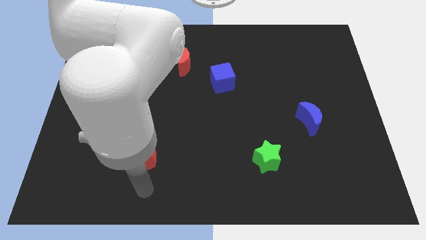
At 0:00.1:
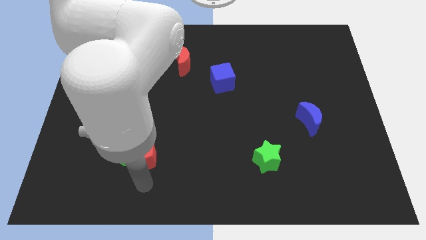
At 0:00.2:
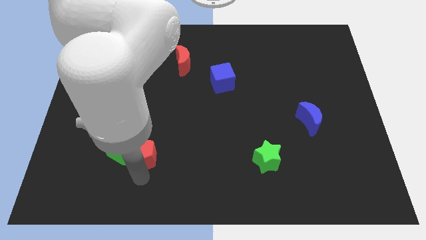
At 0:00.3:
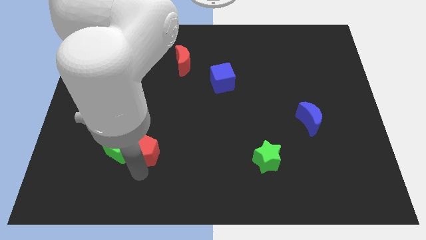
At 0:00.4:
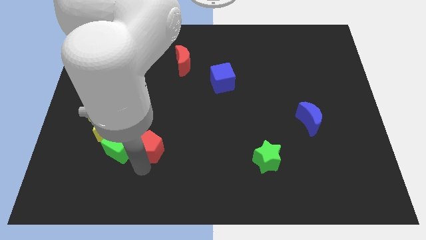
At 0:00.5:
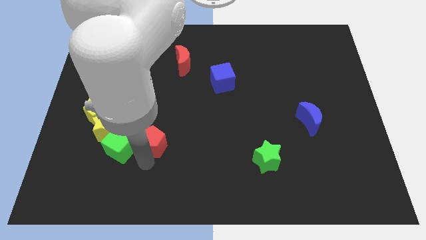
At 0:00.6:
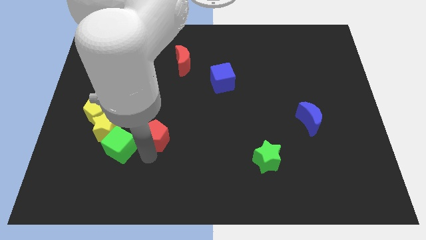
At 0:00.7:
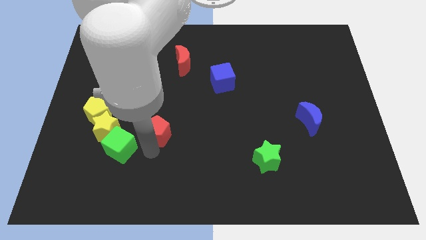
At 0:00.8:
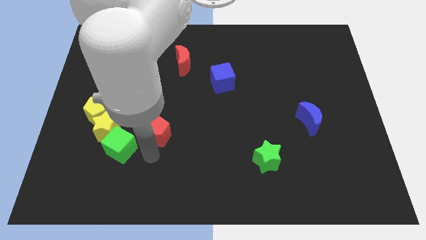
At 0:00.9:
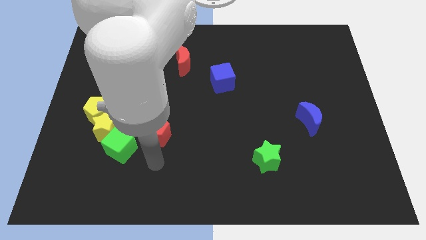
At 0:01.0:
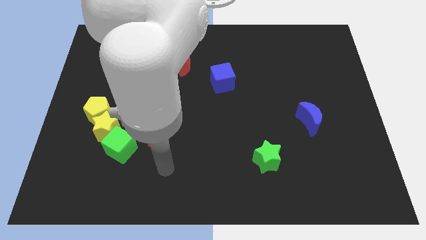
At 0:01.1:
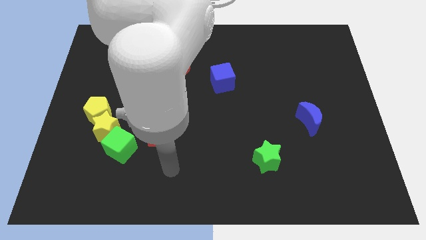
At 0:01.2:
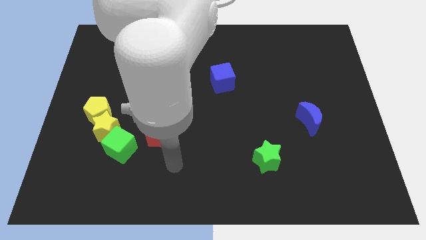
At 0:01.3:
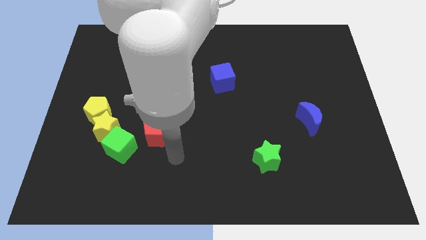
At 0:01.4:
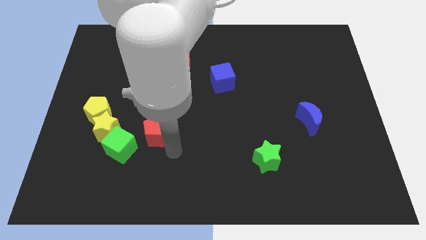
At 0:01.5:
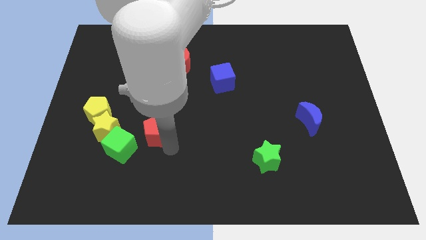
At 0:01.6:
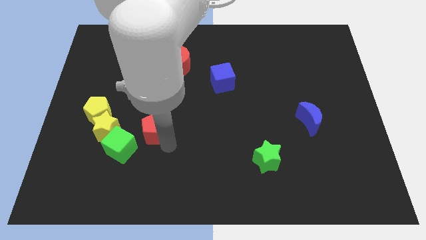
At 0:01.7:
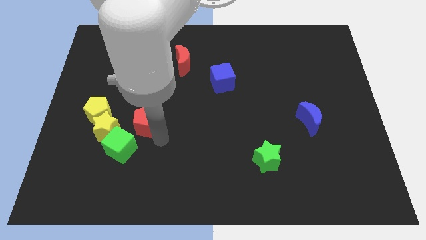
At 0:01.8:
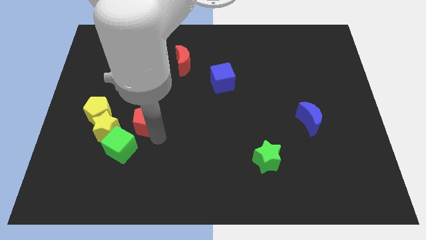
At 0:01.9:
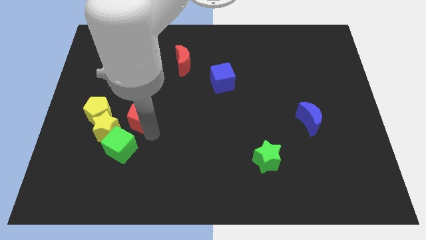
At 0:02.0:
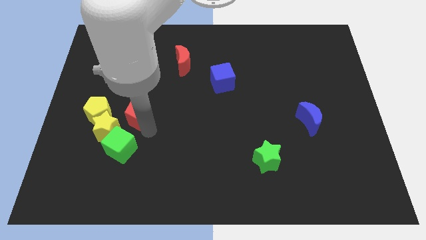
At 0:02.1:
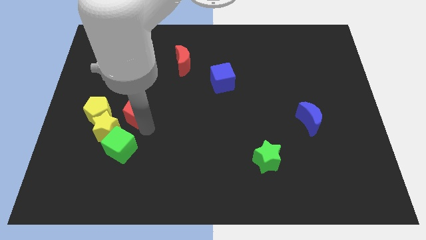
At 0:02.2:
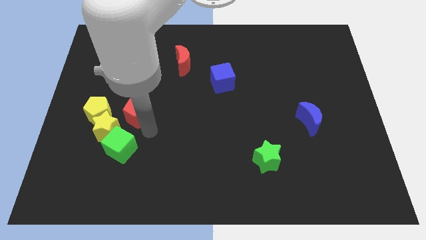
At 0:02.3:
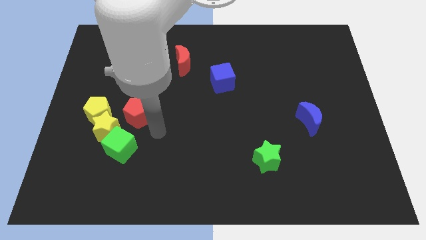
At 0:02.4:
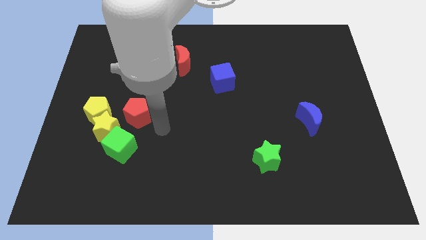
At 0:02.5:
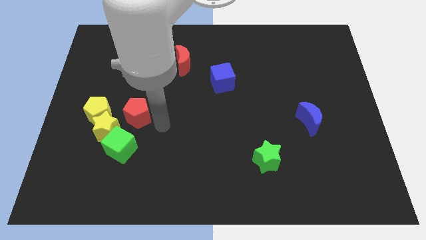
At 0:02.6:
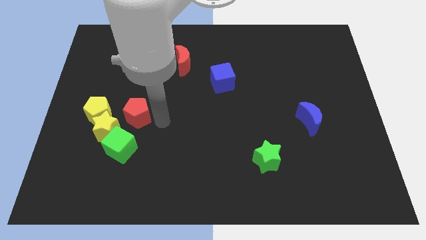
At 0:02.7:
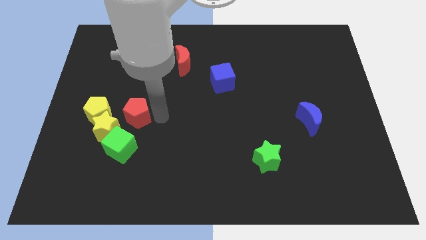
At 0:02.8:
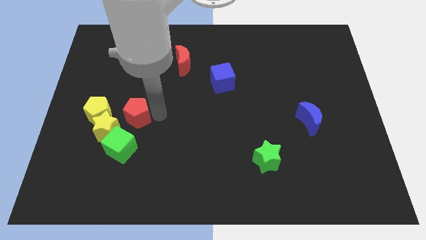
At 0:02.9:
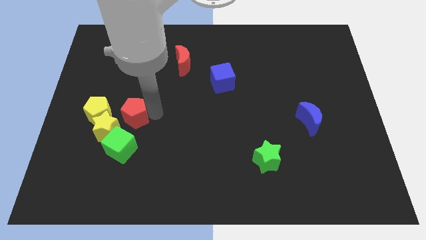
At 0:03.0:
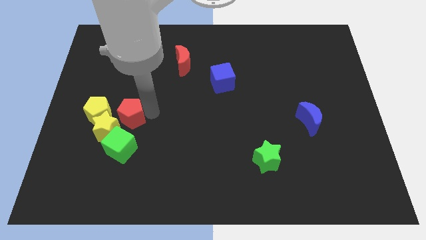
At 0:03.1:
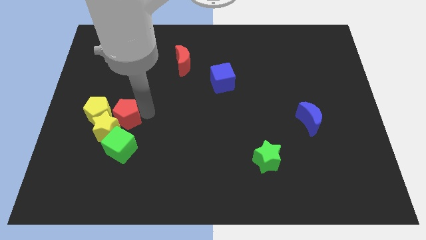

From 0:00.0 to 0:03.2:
place the red pentagon to the right side of the green star

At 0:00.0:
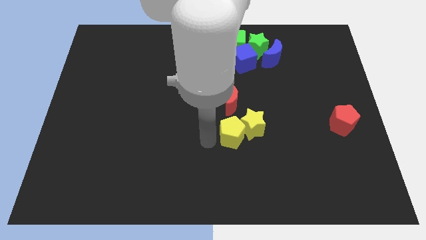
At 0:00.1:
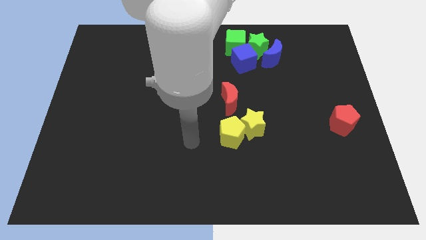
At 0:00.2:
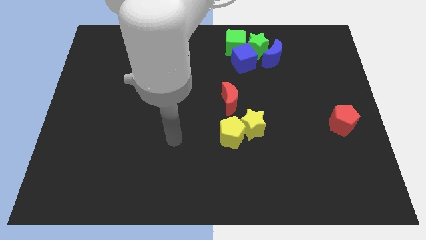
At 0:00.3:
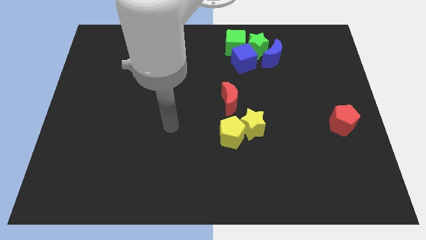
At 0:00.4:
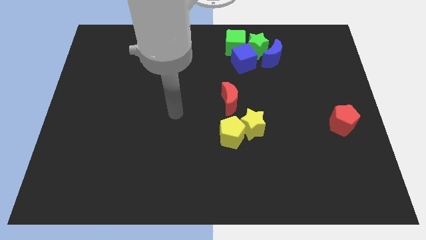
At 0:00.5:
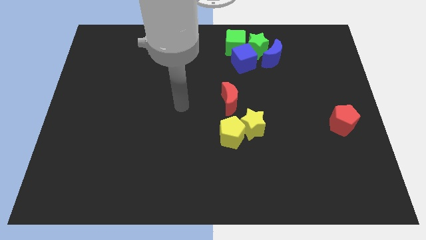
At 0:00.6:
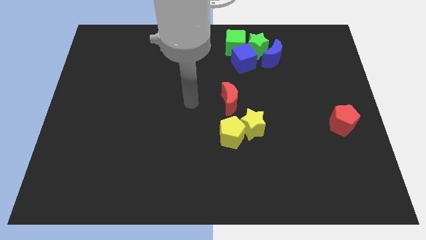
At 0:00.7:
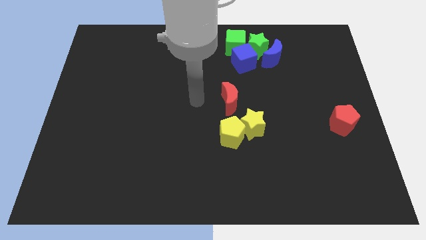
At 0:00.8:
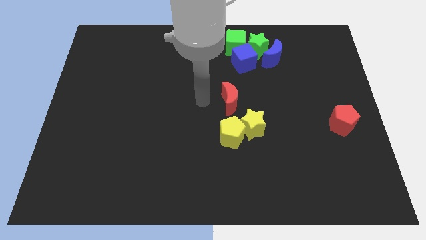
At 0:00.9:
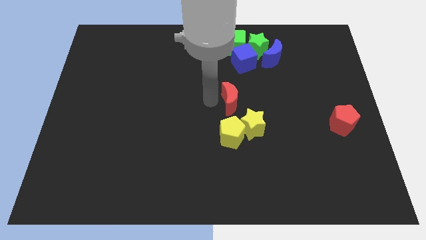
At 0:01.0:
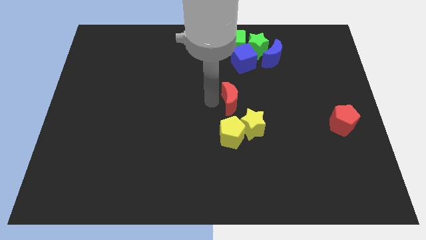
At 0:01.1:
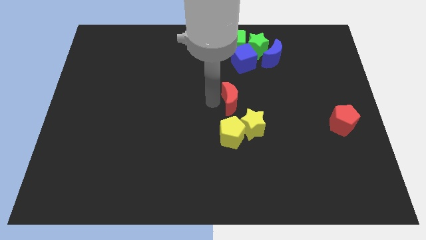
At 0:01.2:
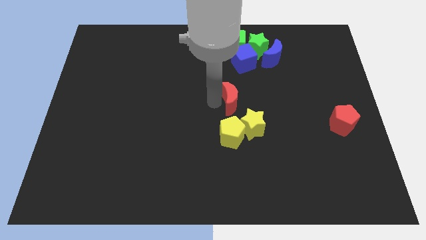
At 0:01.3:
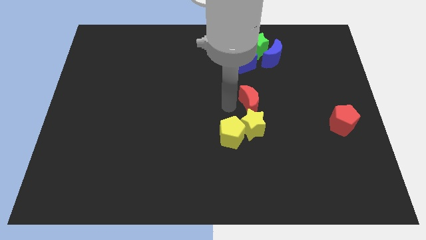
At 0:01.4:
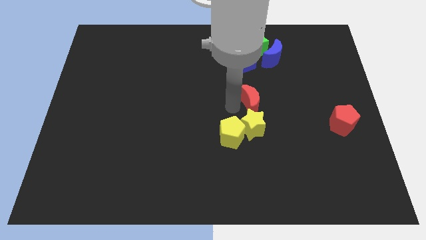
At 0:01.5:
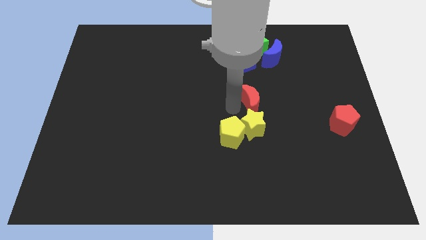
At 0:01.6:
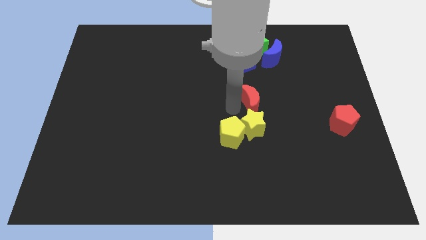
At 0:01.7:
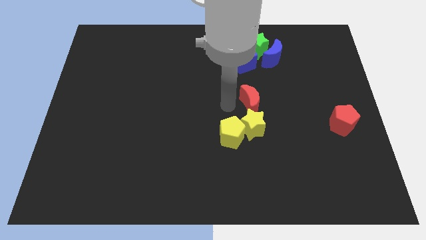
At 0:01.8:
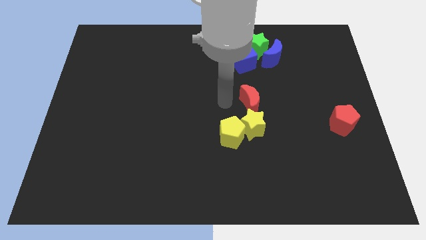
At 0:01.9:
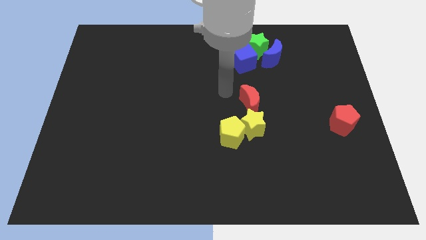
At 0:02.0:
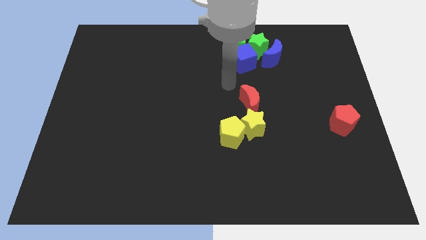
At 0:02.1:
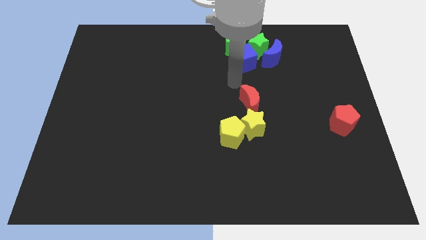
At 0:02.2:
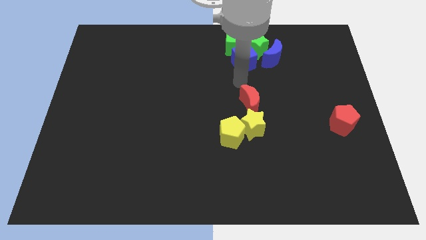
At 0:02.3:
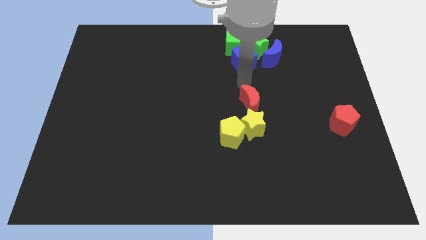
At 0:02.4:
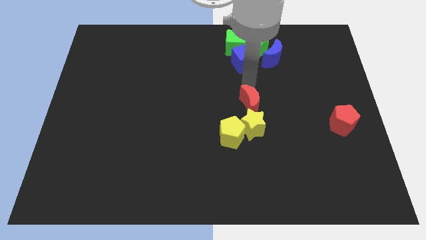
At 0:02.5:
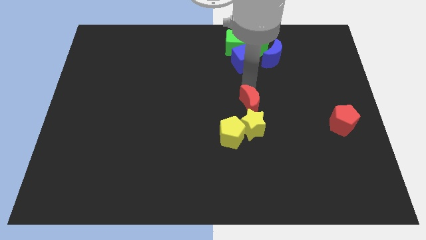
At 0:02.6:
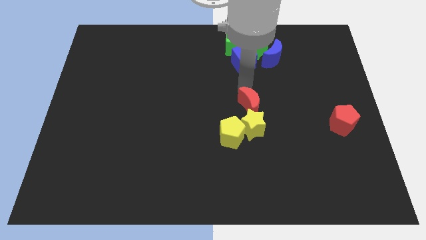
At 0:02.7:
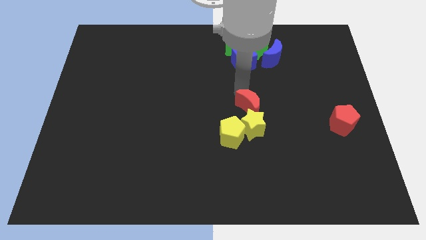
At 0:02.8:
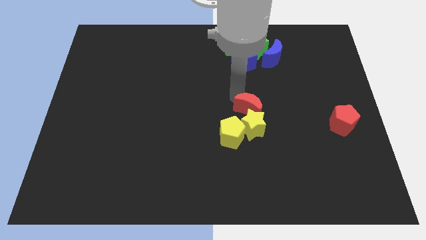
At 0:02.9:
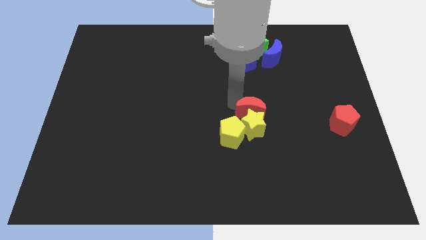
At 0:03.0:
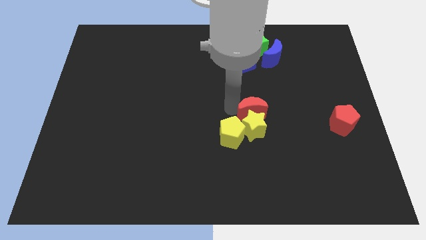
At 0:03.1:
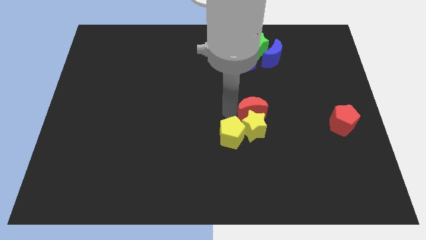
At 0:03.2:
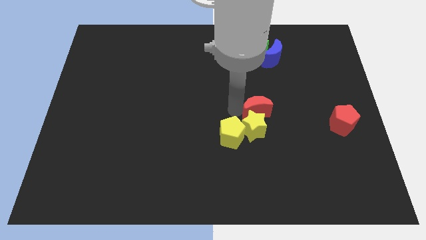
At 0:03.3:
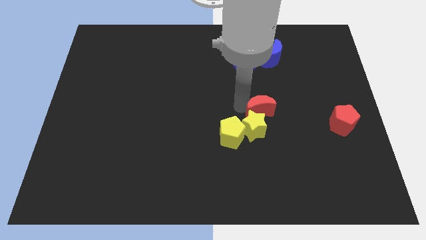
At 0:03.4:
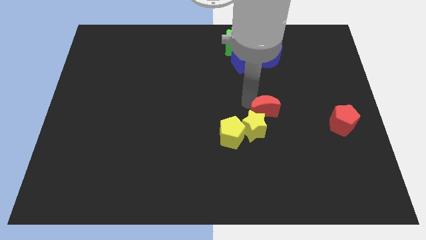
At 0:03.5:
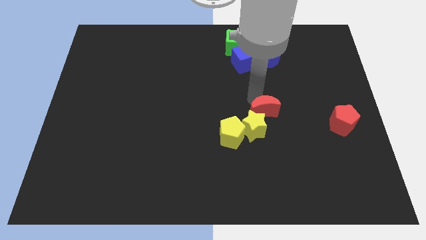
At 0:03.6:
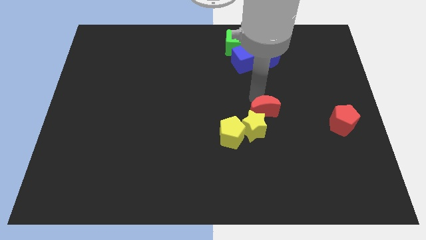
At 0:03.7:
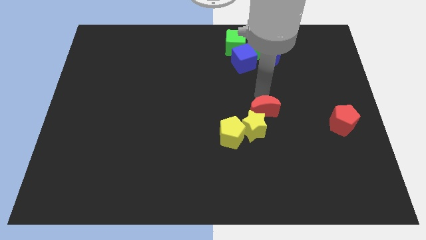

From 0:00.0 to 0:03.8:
put the red crescent to the top right side of the yellow star

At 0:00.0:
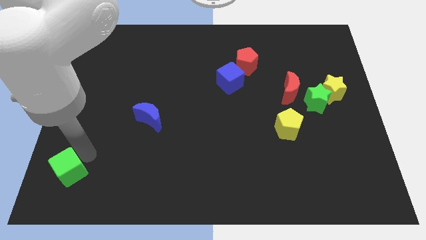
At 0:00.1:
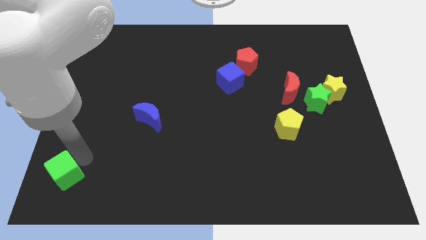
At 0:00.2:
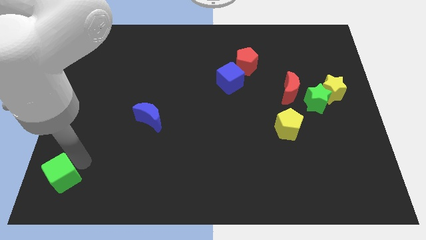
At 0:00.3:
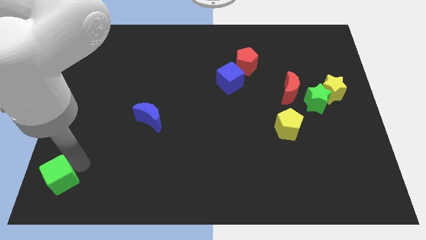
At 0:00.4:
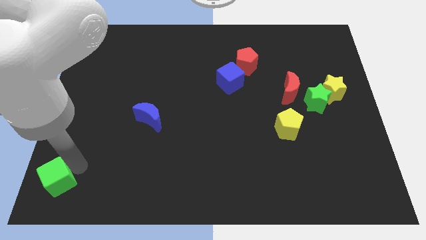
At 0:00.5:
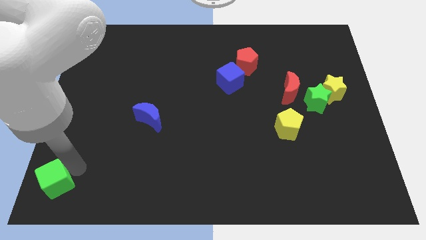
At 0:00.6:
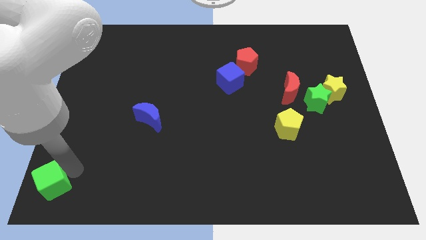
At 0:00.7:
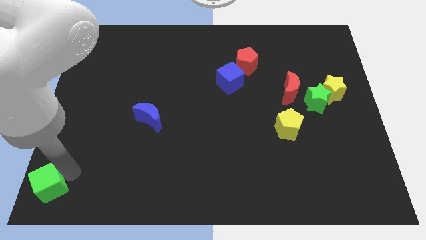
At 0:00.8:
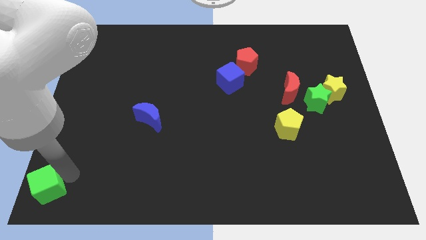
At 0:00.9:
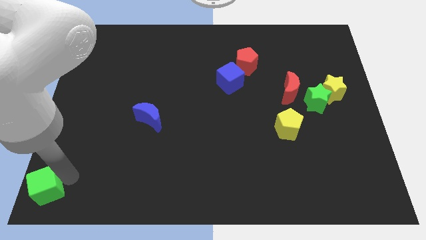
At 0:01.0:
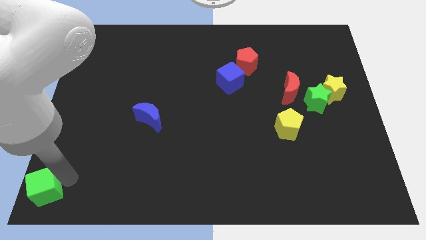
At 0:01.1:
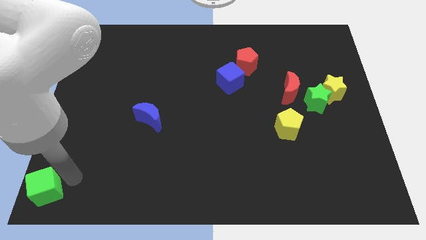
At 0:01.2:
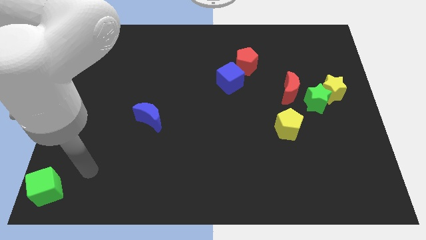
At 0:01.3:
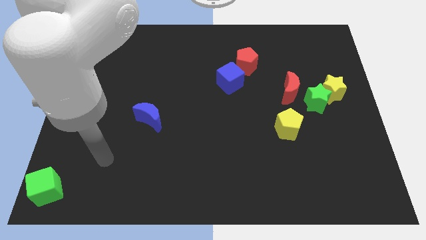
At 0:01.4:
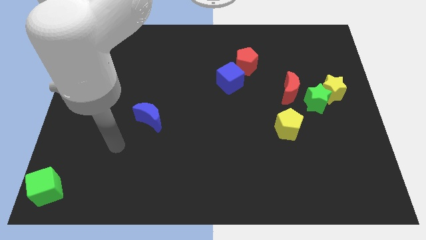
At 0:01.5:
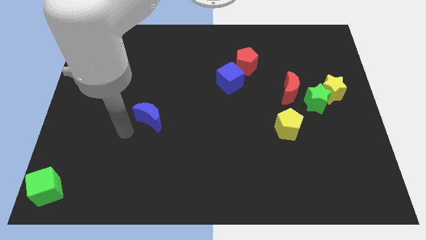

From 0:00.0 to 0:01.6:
push the green cube to the bottom left corner

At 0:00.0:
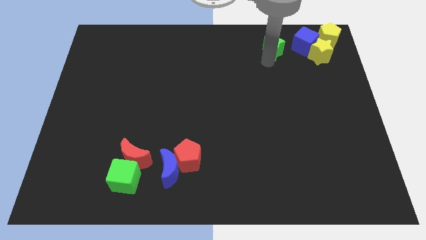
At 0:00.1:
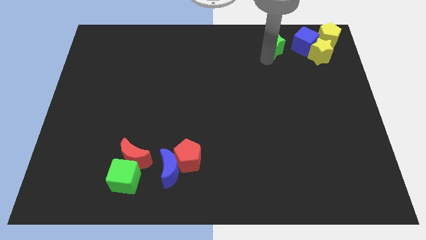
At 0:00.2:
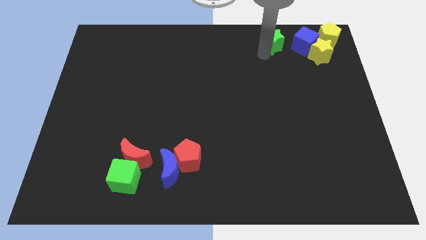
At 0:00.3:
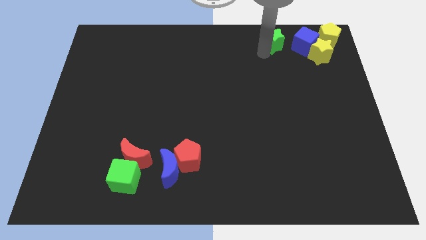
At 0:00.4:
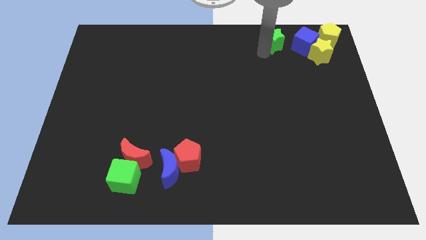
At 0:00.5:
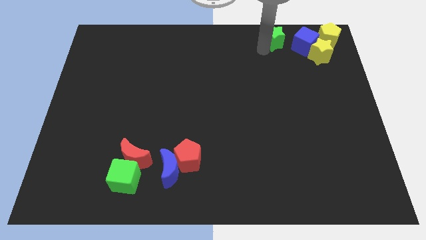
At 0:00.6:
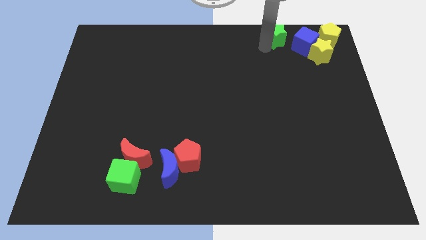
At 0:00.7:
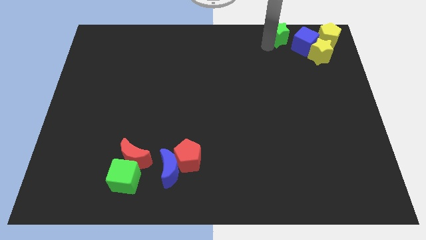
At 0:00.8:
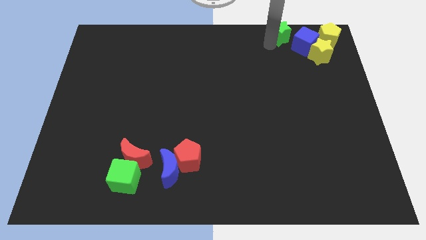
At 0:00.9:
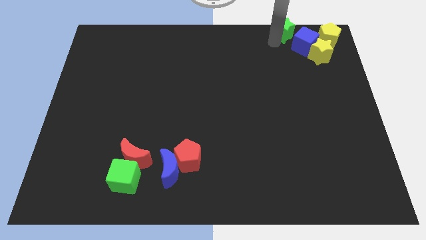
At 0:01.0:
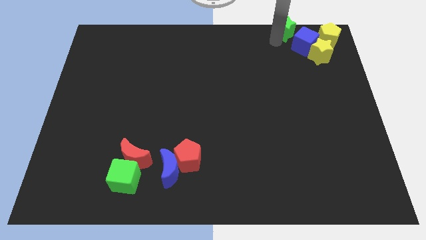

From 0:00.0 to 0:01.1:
place the green star to the left of the blue cube
